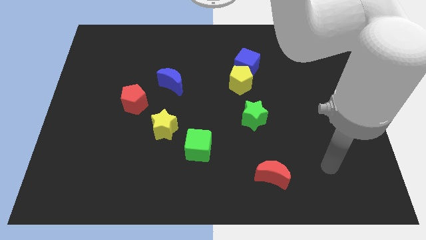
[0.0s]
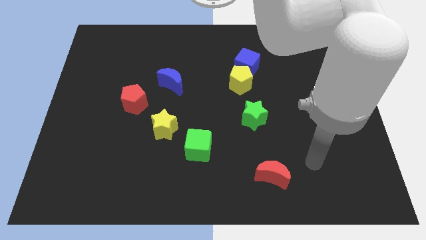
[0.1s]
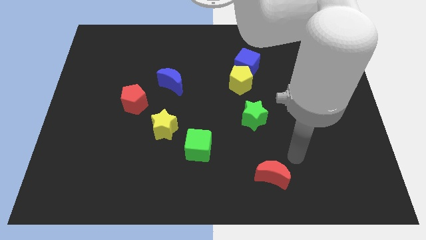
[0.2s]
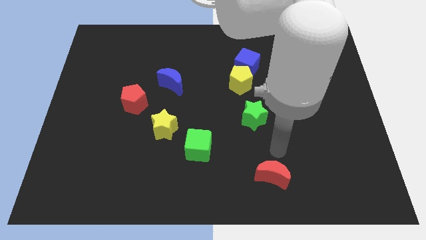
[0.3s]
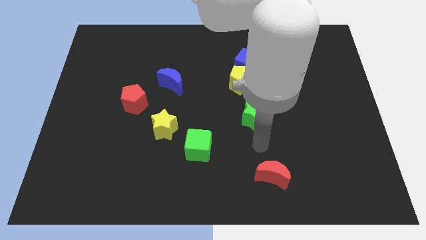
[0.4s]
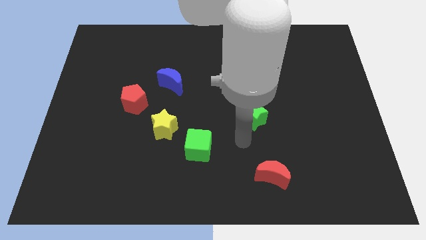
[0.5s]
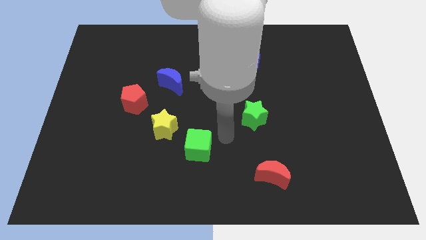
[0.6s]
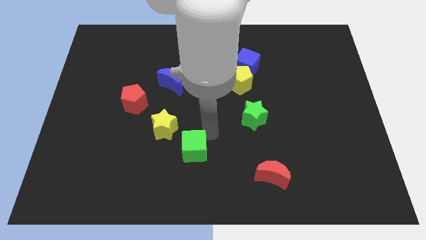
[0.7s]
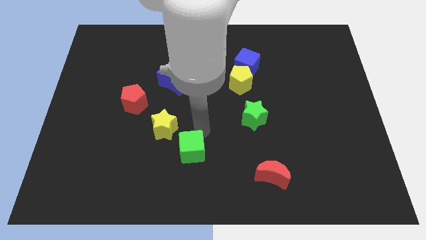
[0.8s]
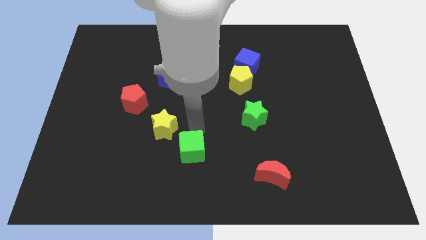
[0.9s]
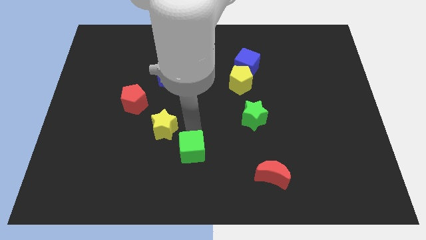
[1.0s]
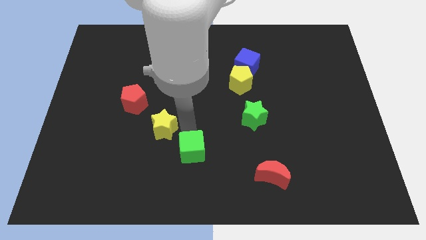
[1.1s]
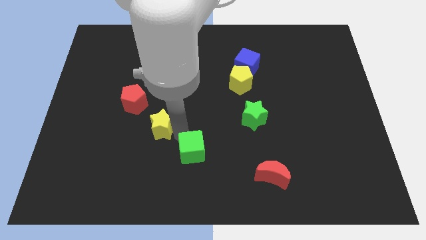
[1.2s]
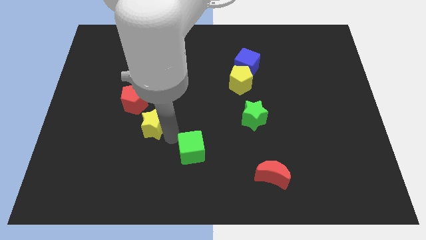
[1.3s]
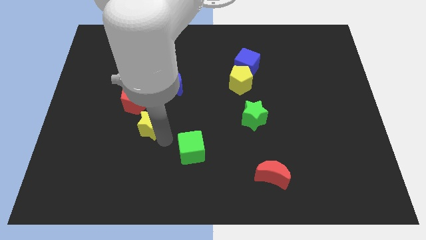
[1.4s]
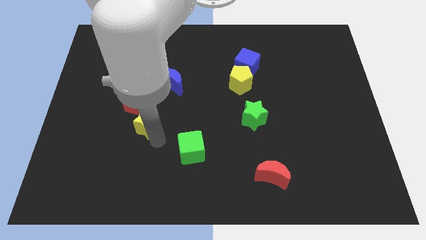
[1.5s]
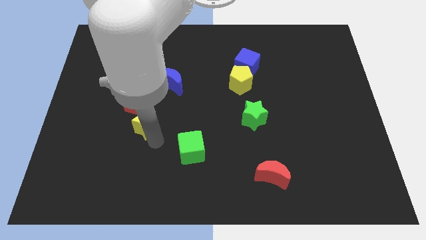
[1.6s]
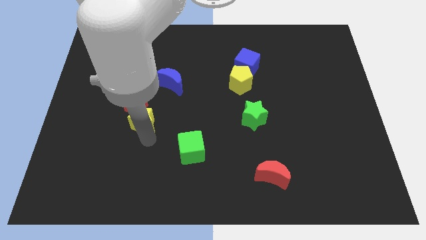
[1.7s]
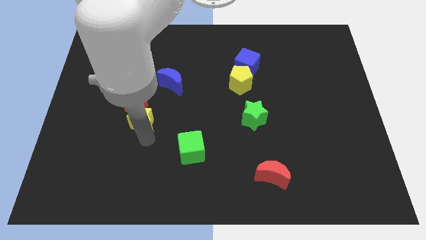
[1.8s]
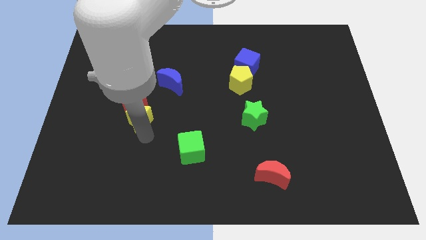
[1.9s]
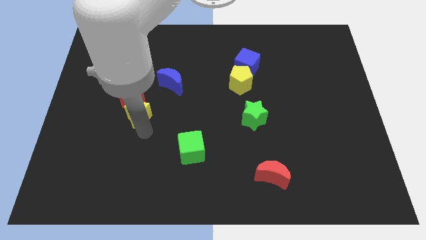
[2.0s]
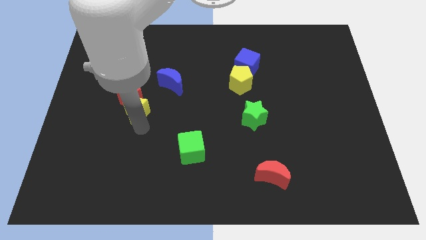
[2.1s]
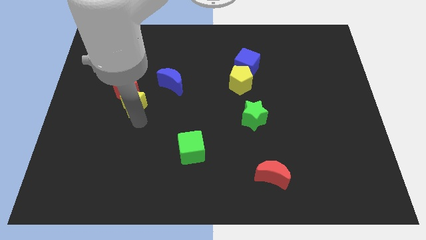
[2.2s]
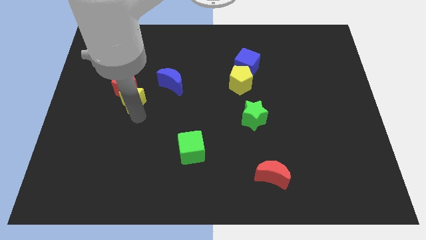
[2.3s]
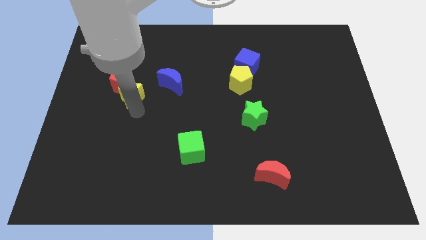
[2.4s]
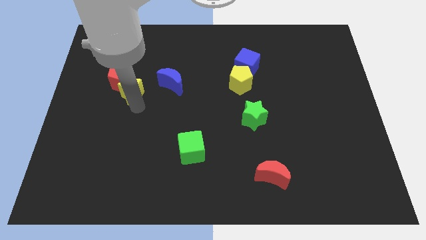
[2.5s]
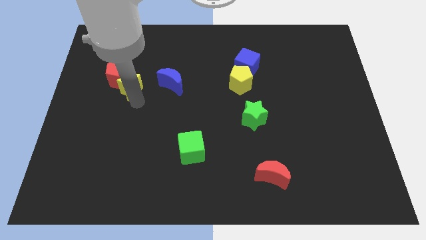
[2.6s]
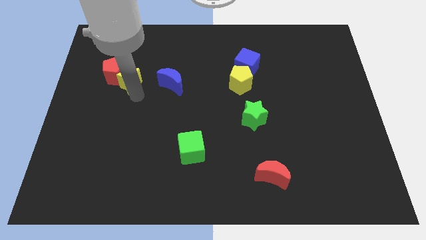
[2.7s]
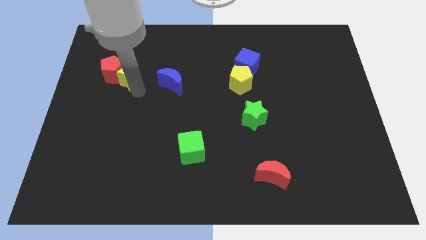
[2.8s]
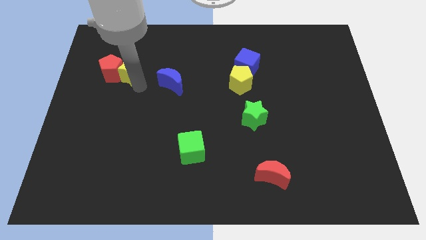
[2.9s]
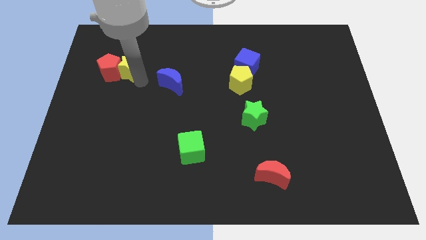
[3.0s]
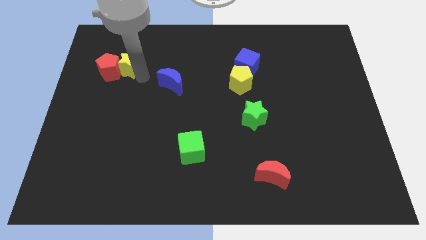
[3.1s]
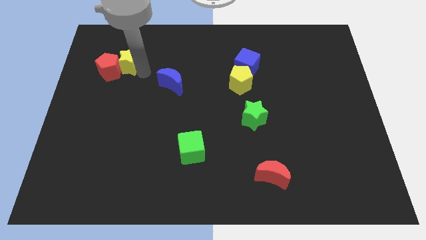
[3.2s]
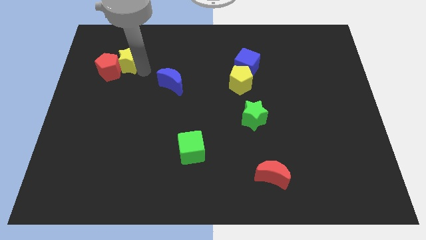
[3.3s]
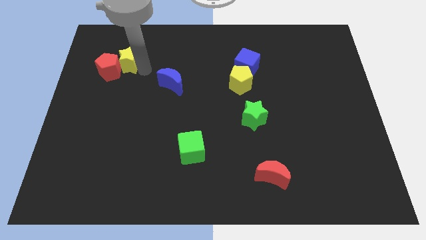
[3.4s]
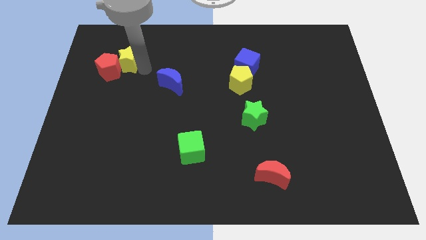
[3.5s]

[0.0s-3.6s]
push yellow star into the red pentagon

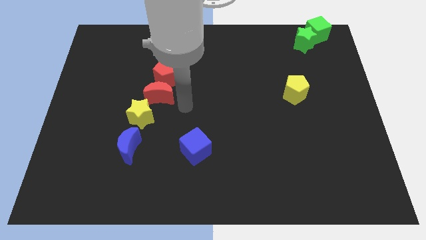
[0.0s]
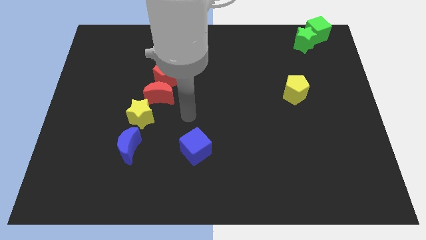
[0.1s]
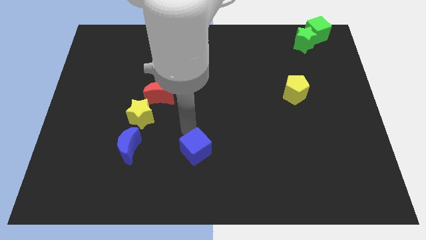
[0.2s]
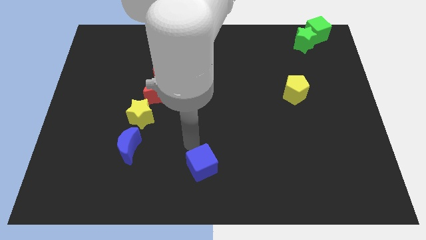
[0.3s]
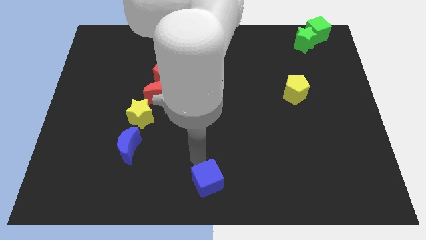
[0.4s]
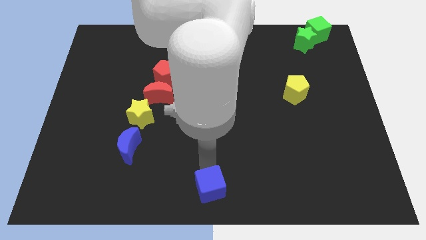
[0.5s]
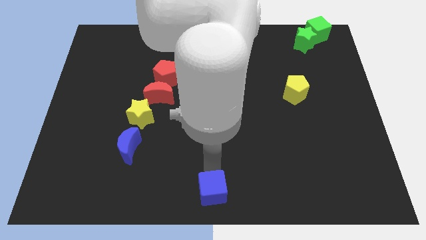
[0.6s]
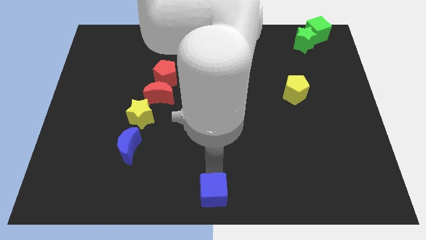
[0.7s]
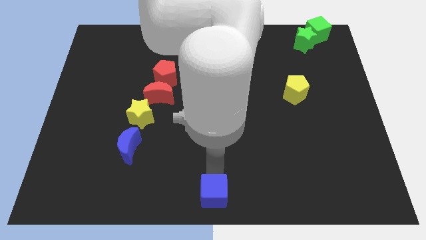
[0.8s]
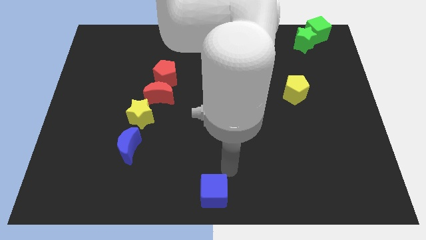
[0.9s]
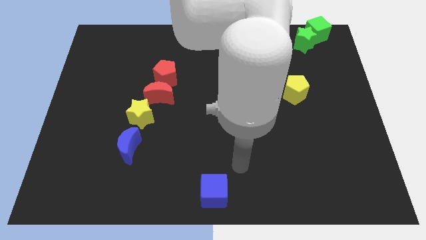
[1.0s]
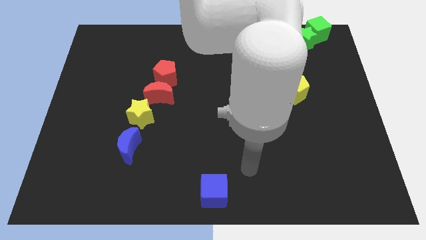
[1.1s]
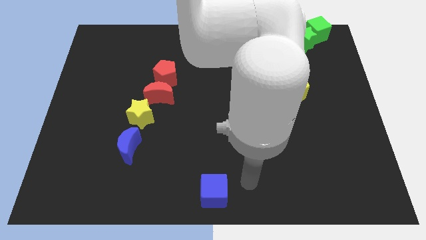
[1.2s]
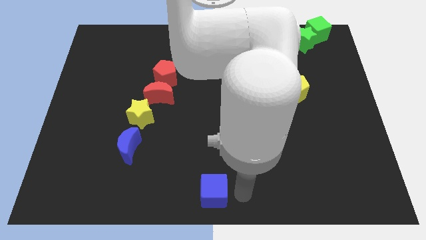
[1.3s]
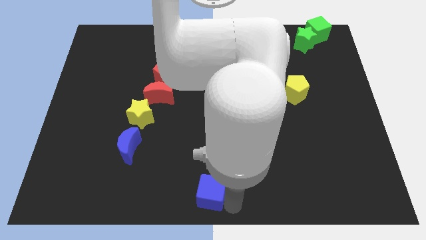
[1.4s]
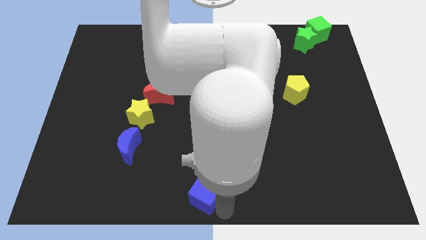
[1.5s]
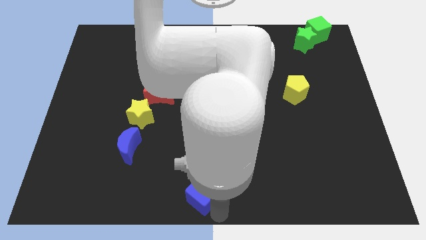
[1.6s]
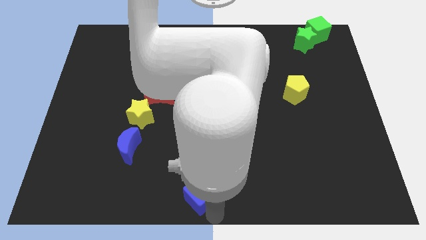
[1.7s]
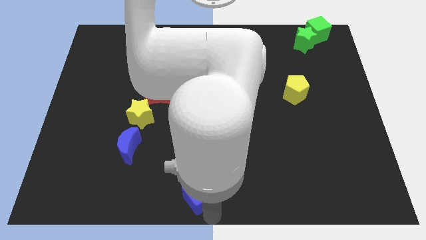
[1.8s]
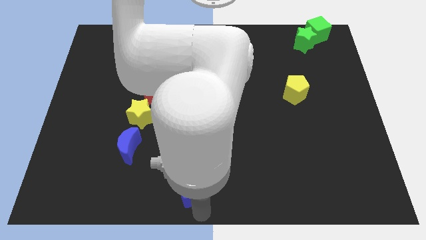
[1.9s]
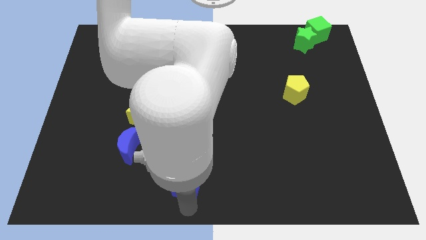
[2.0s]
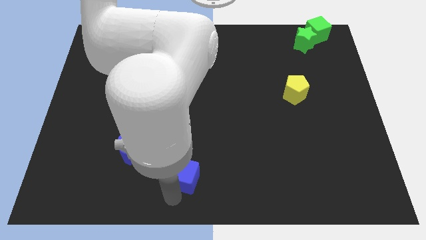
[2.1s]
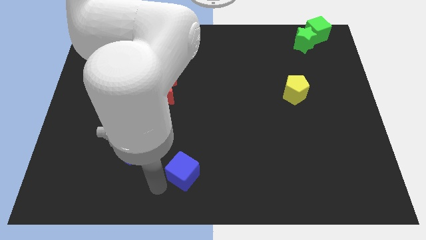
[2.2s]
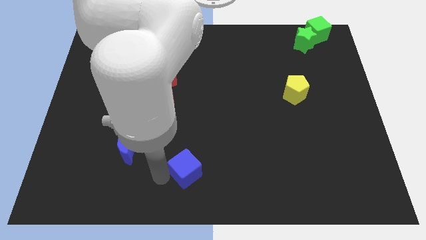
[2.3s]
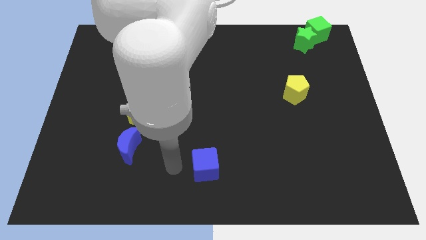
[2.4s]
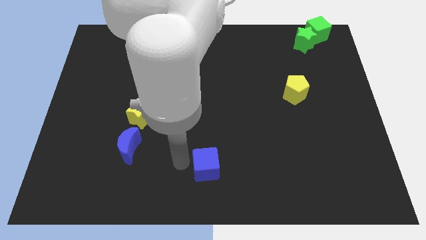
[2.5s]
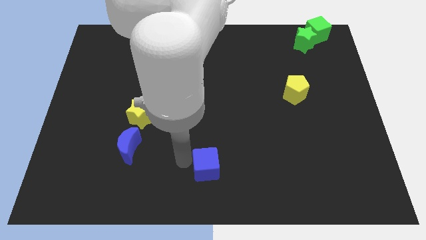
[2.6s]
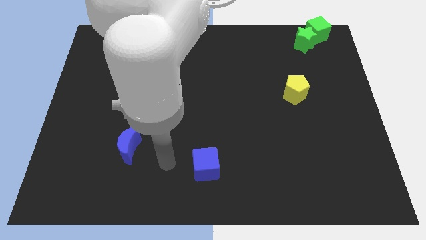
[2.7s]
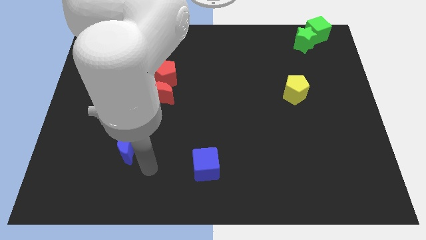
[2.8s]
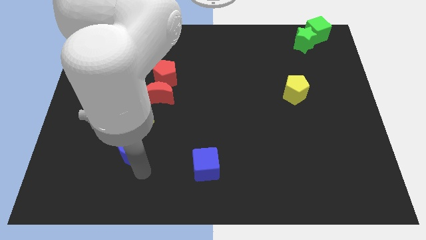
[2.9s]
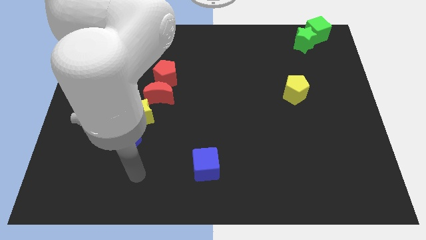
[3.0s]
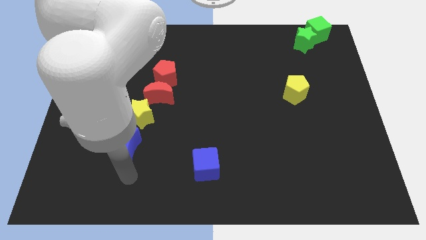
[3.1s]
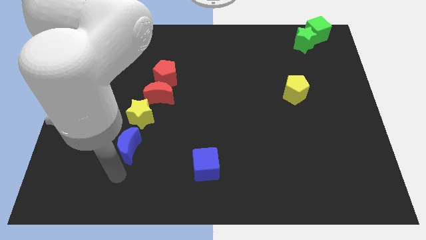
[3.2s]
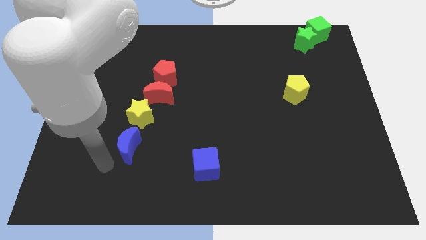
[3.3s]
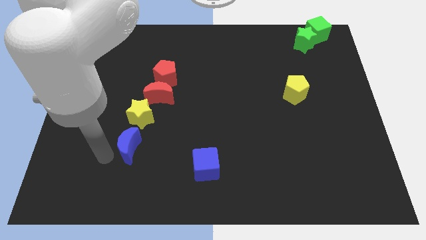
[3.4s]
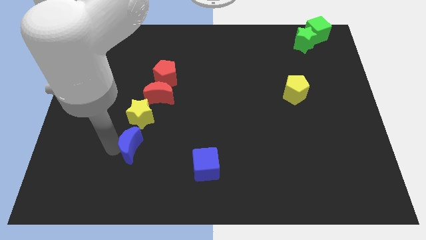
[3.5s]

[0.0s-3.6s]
push the blue cube to the top side

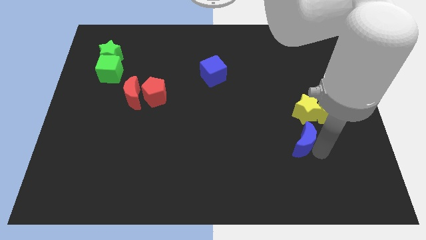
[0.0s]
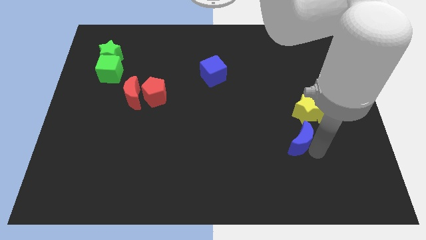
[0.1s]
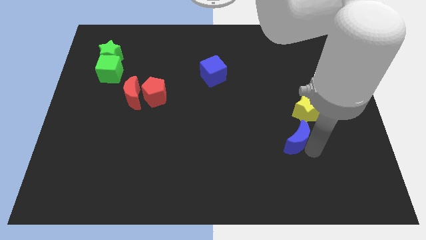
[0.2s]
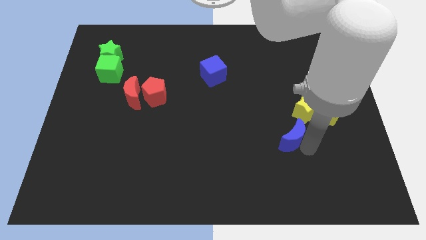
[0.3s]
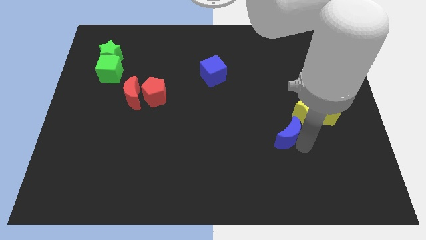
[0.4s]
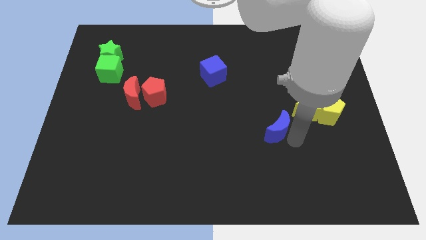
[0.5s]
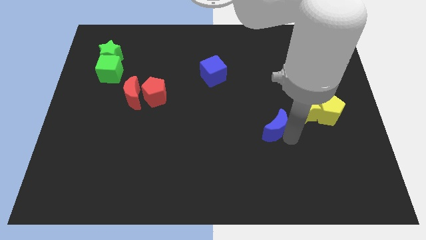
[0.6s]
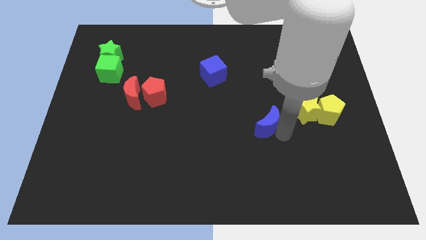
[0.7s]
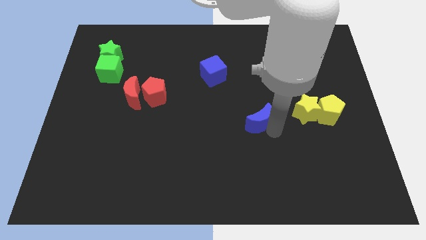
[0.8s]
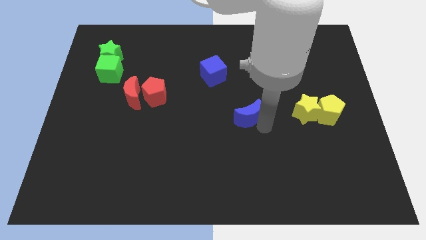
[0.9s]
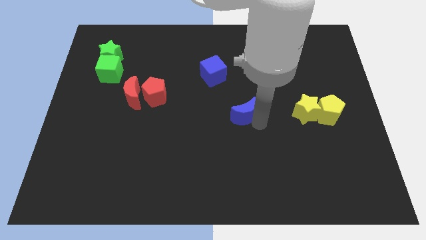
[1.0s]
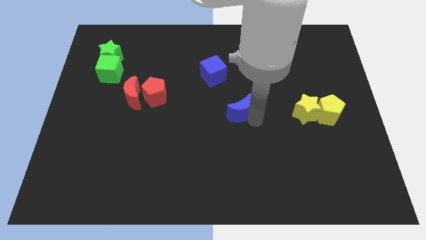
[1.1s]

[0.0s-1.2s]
move the blue moon horizontal to the yellow blocks

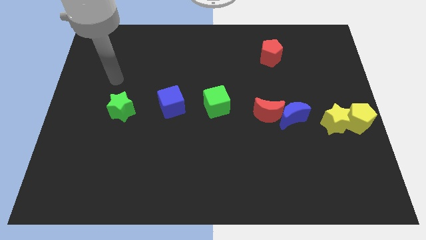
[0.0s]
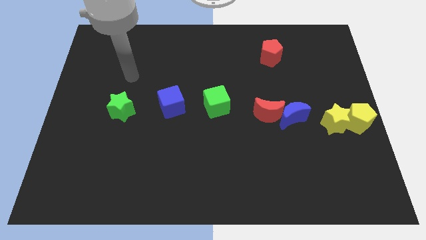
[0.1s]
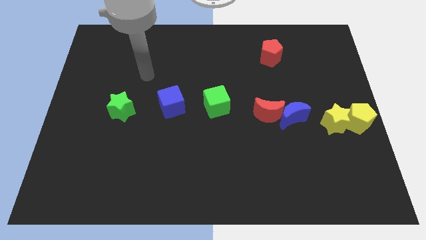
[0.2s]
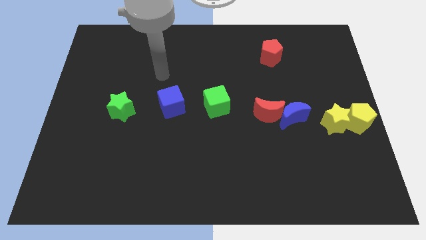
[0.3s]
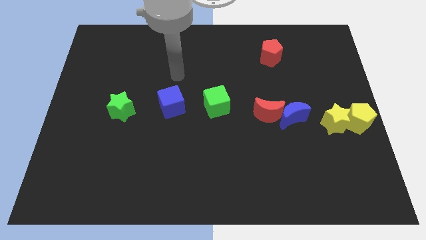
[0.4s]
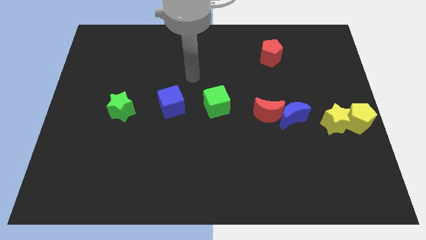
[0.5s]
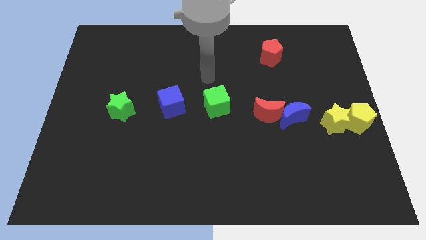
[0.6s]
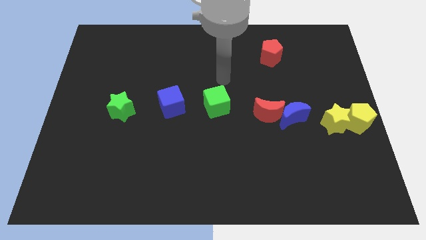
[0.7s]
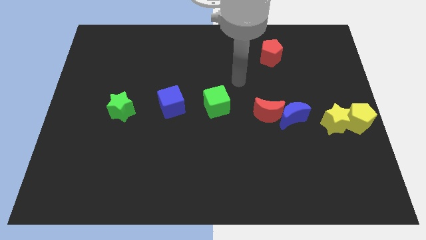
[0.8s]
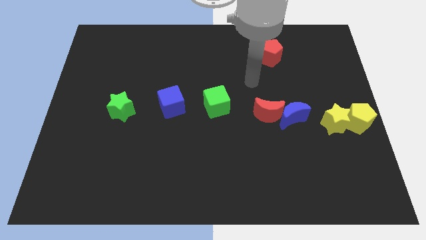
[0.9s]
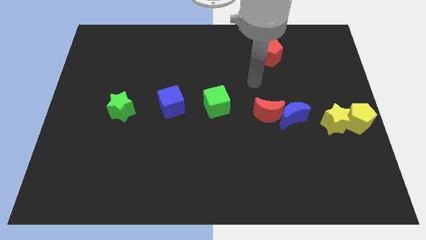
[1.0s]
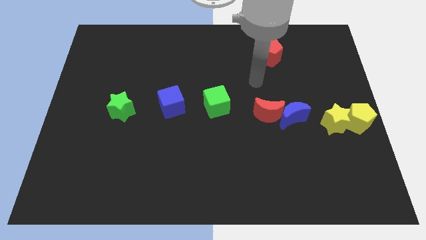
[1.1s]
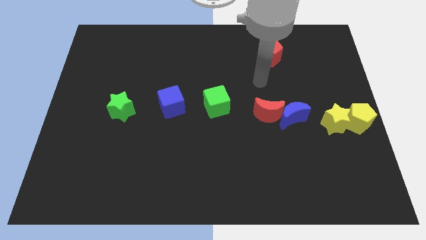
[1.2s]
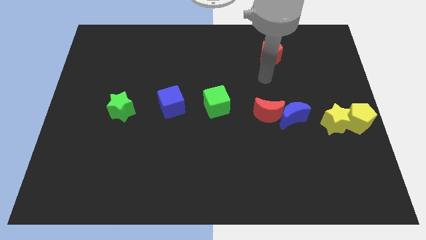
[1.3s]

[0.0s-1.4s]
point the arm below the red pentagon
